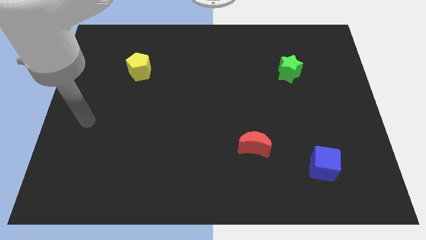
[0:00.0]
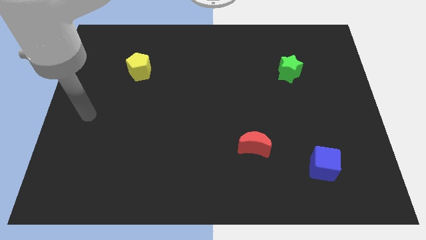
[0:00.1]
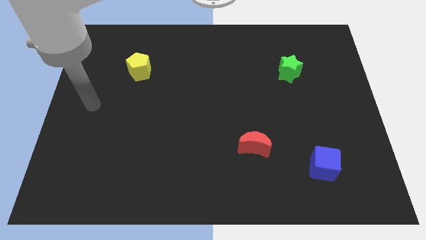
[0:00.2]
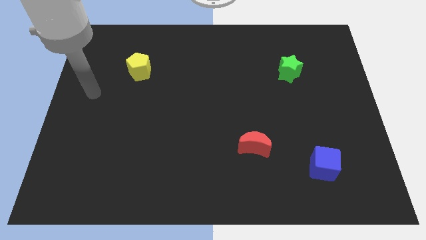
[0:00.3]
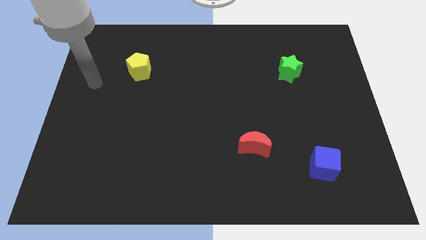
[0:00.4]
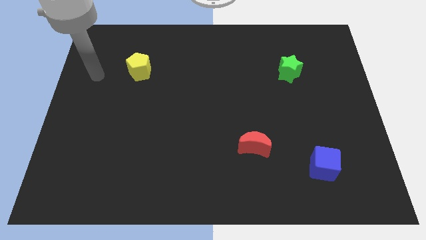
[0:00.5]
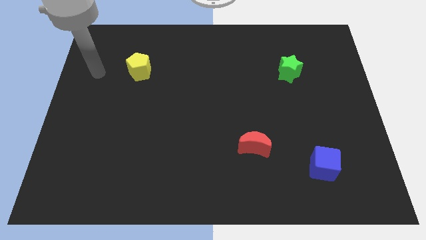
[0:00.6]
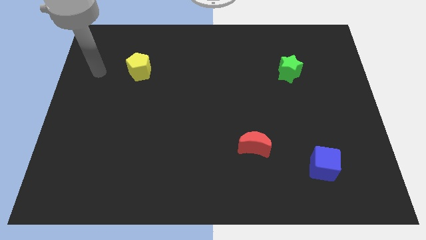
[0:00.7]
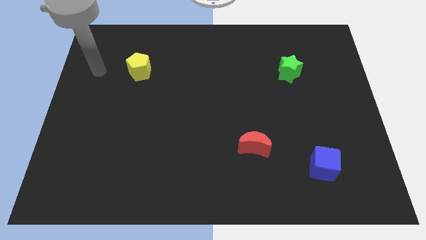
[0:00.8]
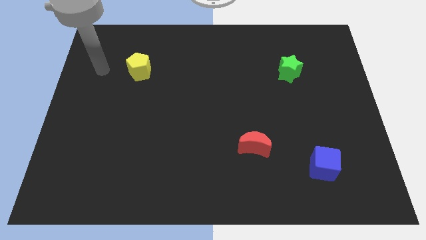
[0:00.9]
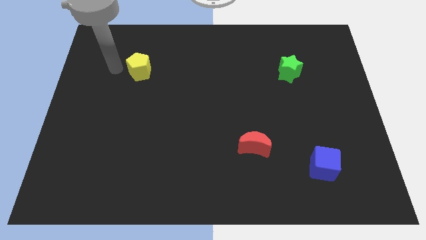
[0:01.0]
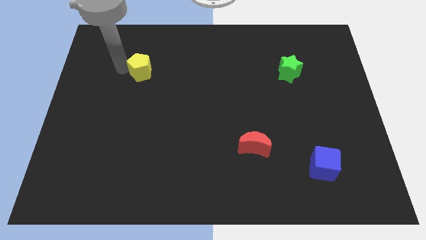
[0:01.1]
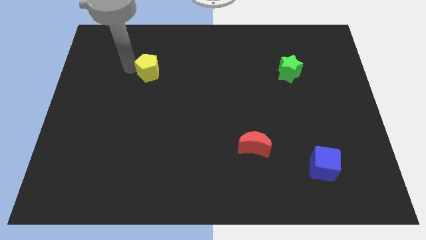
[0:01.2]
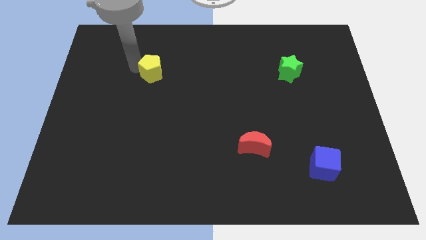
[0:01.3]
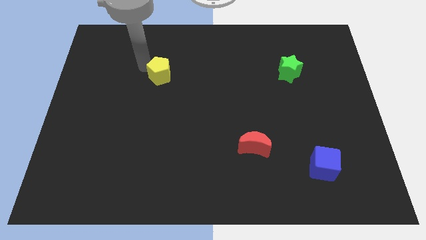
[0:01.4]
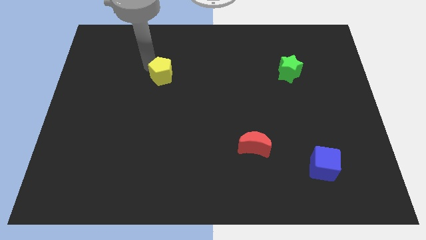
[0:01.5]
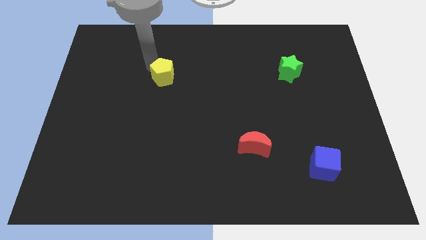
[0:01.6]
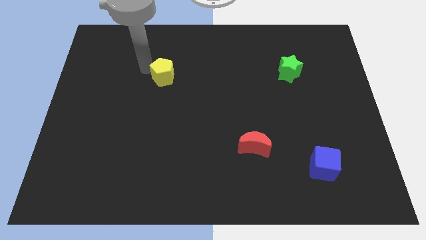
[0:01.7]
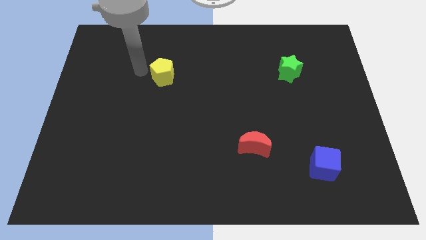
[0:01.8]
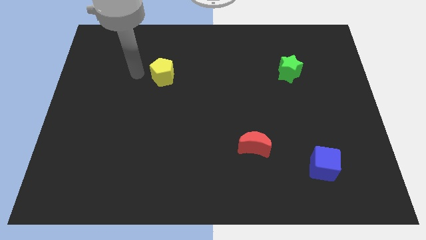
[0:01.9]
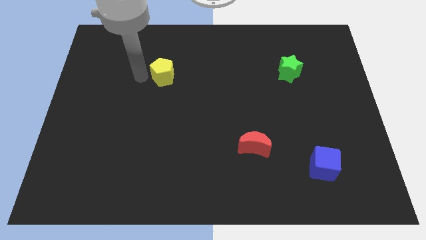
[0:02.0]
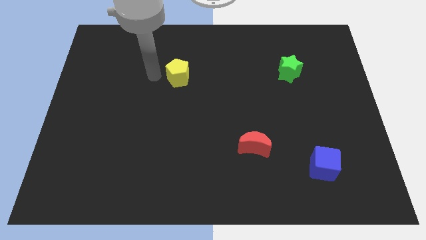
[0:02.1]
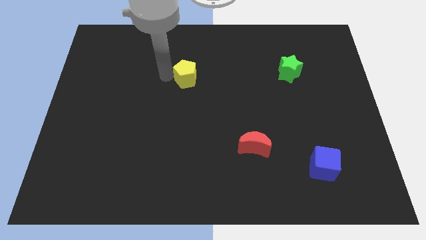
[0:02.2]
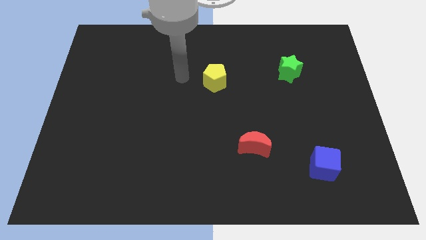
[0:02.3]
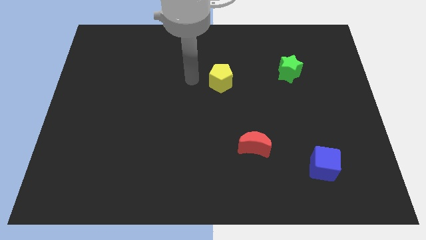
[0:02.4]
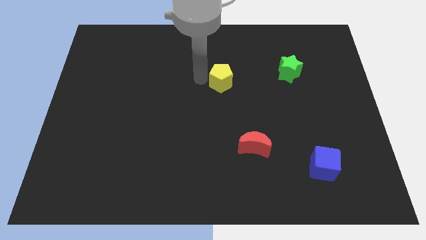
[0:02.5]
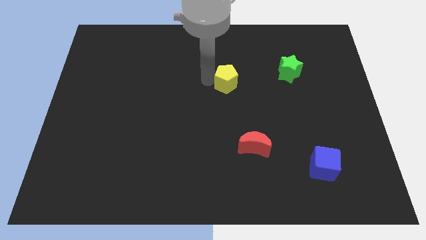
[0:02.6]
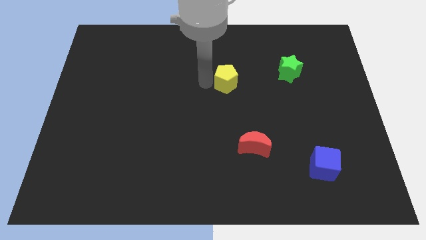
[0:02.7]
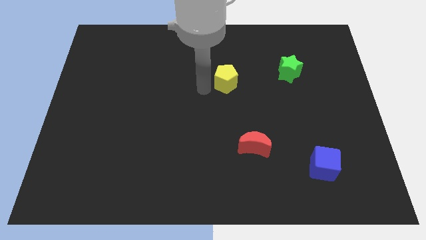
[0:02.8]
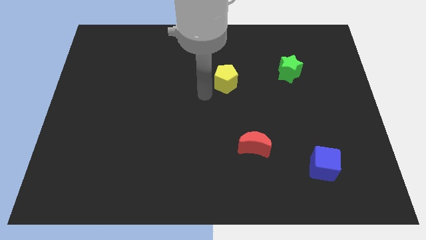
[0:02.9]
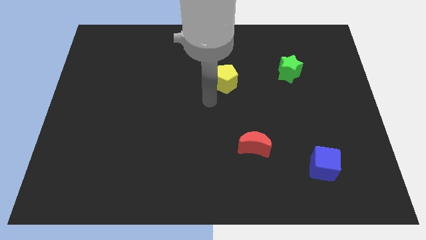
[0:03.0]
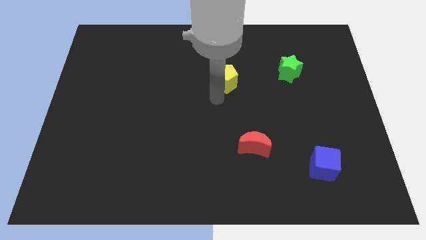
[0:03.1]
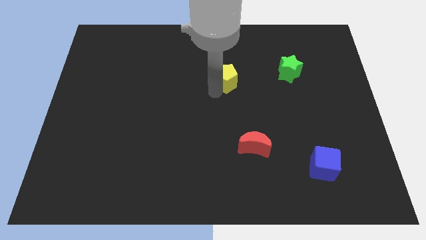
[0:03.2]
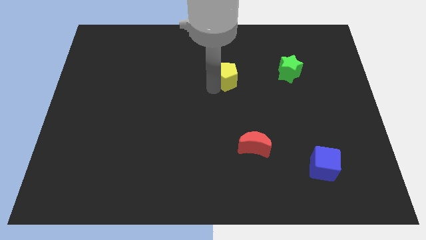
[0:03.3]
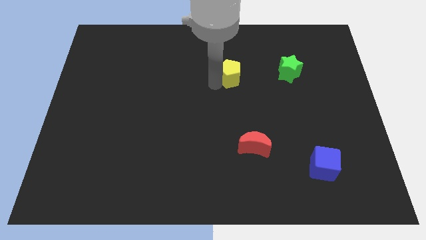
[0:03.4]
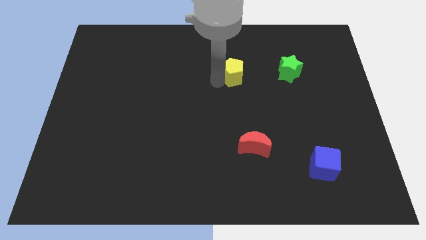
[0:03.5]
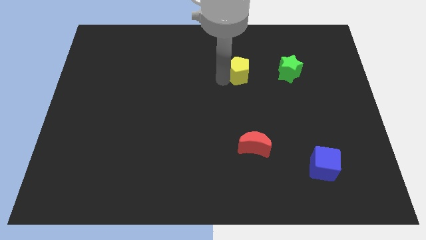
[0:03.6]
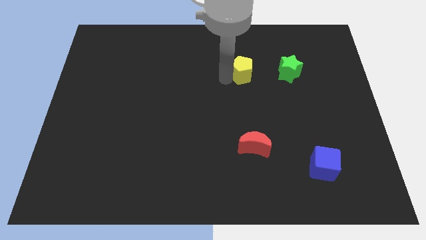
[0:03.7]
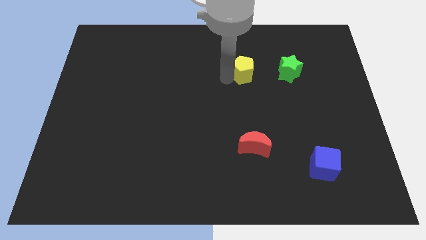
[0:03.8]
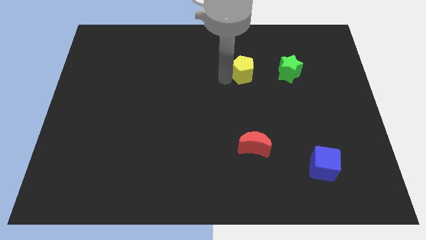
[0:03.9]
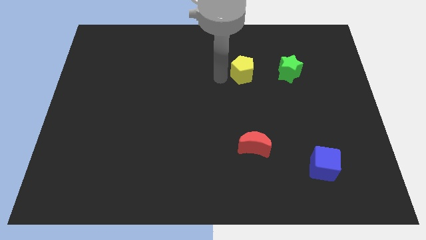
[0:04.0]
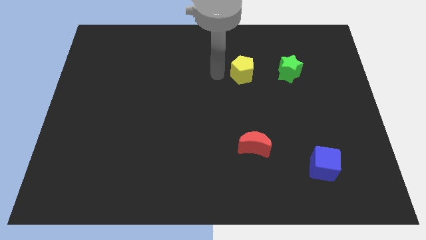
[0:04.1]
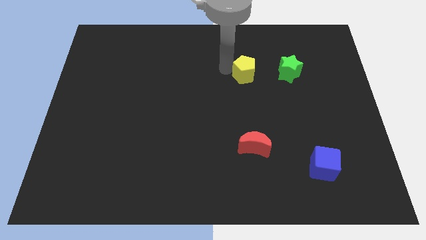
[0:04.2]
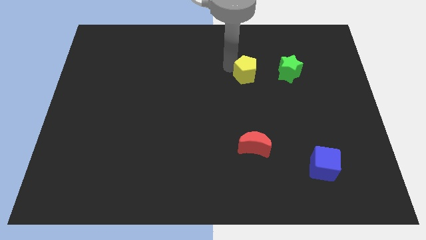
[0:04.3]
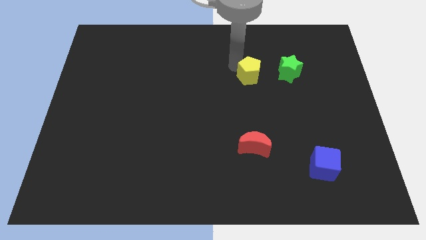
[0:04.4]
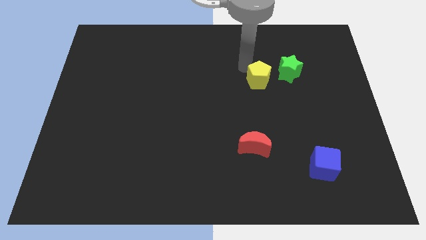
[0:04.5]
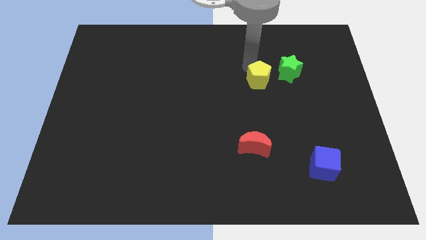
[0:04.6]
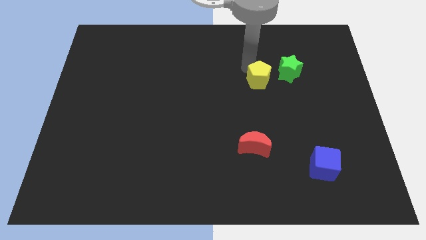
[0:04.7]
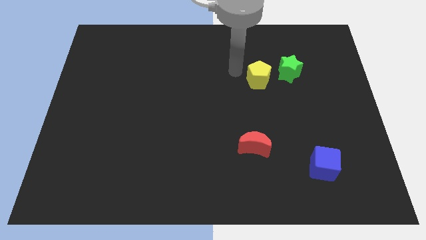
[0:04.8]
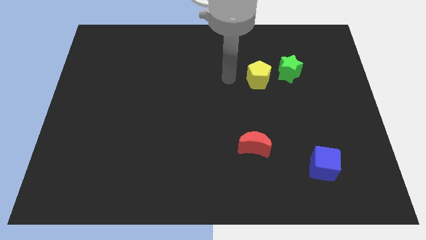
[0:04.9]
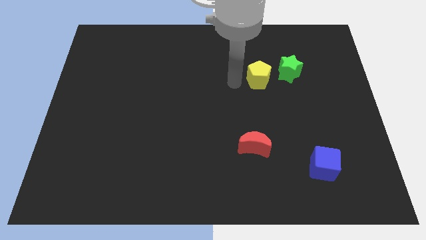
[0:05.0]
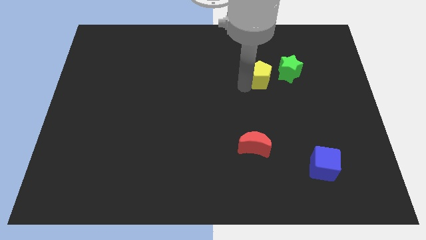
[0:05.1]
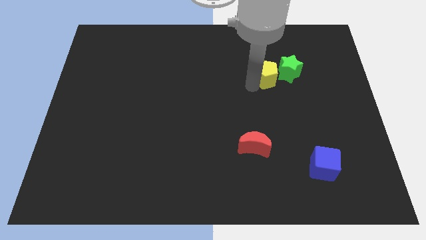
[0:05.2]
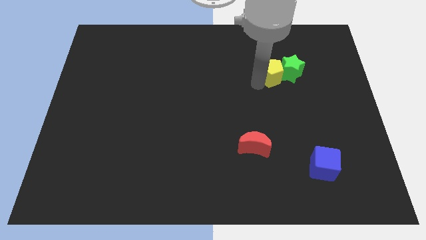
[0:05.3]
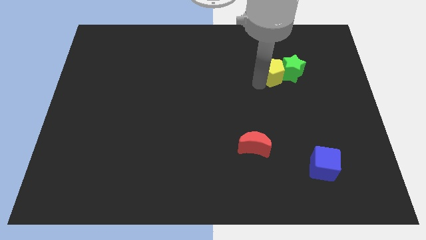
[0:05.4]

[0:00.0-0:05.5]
slide the yellow block close to the green block

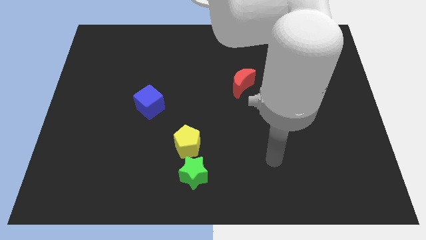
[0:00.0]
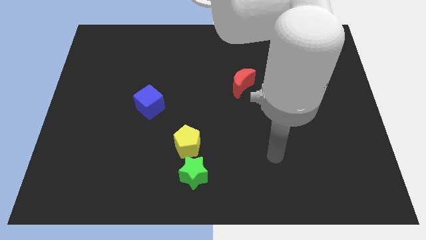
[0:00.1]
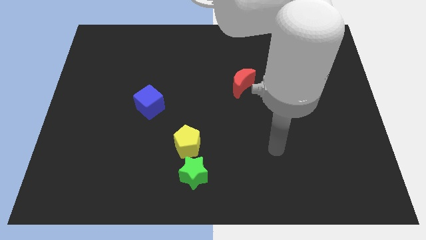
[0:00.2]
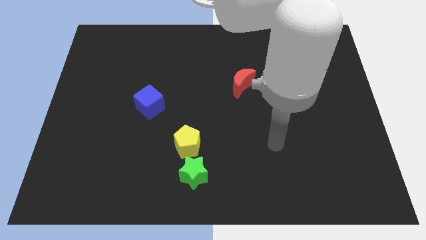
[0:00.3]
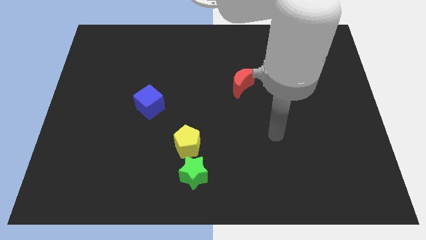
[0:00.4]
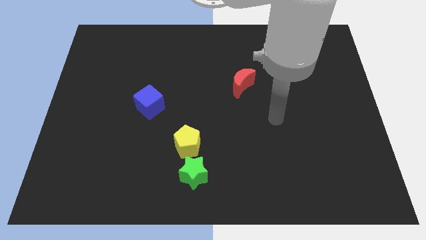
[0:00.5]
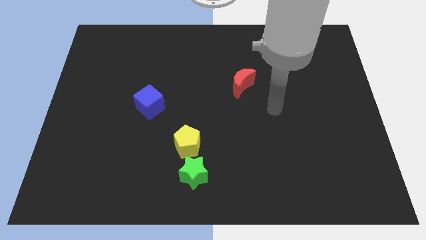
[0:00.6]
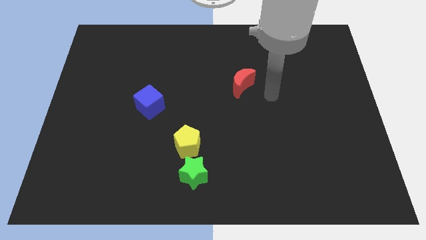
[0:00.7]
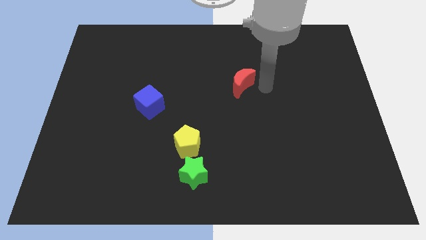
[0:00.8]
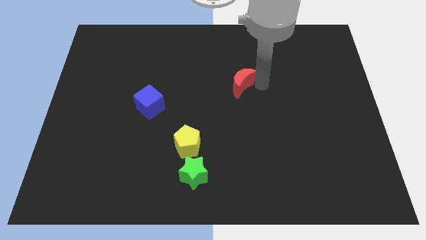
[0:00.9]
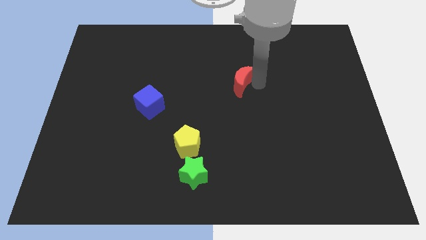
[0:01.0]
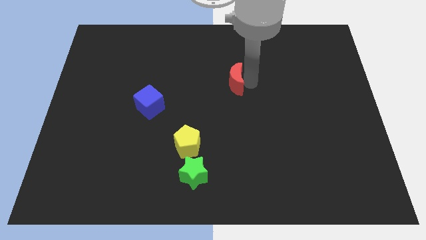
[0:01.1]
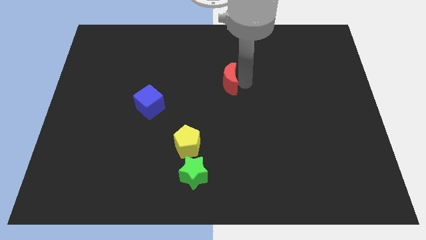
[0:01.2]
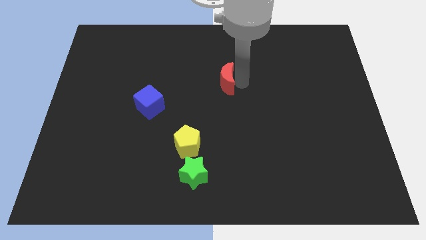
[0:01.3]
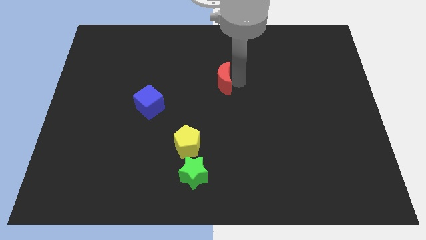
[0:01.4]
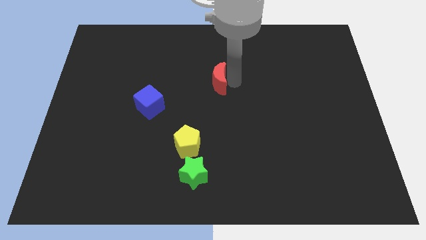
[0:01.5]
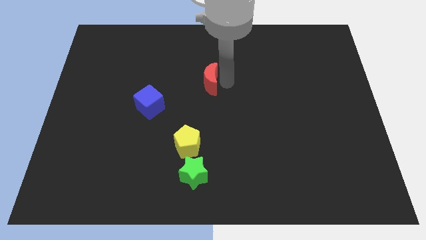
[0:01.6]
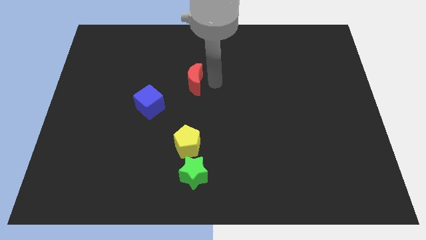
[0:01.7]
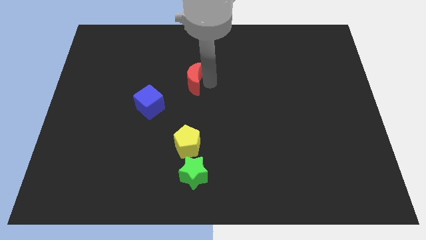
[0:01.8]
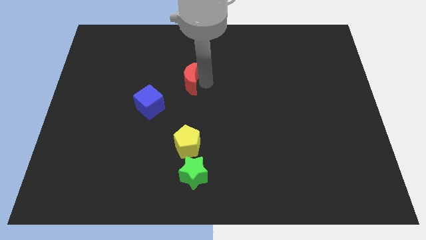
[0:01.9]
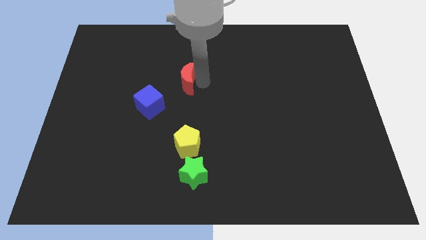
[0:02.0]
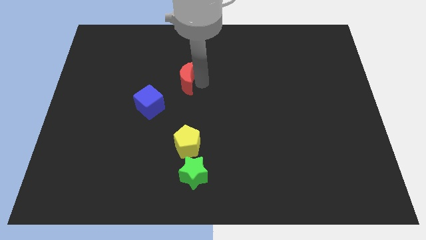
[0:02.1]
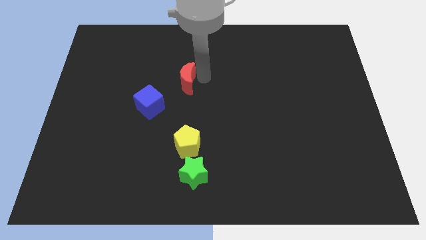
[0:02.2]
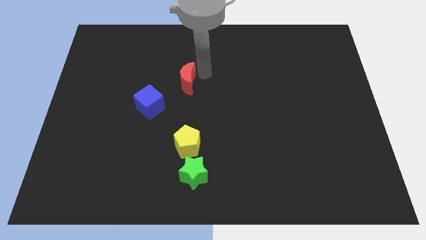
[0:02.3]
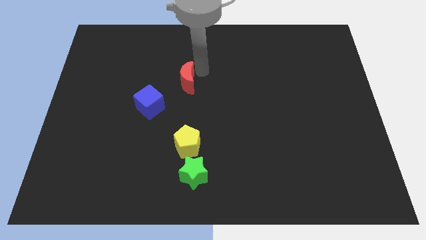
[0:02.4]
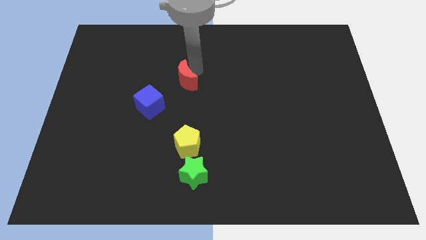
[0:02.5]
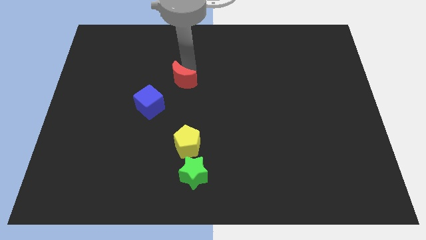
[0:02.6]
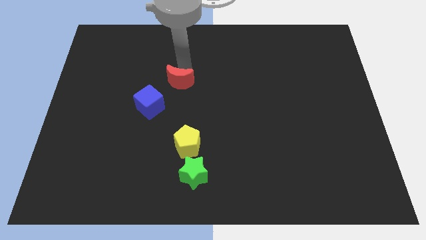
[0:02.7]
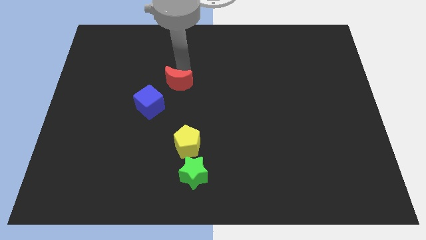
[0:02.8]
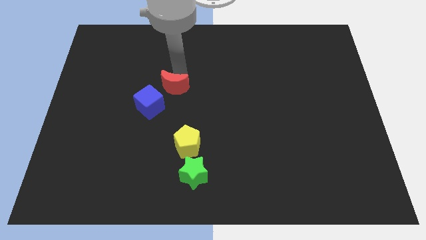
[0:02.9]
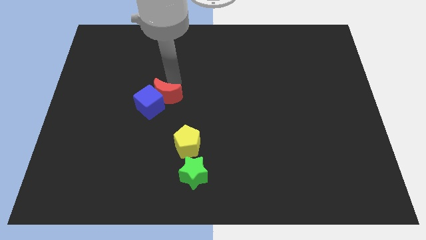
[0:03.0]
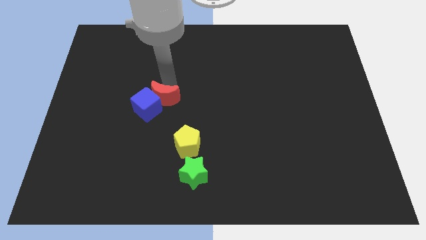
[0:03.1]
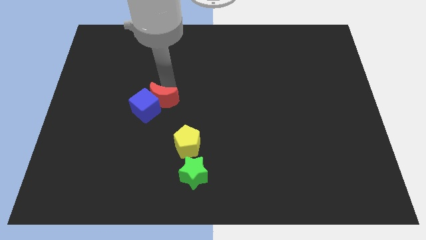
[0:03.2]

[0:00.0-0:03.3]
slide the red moon to the cube
